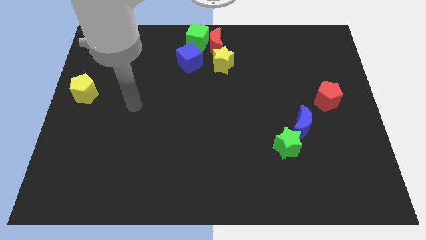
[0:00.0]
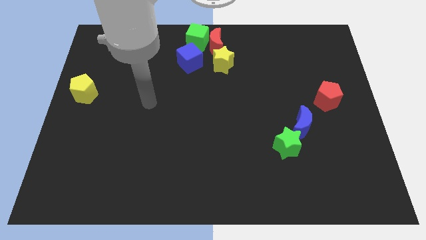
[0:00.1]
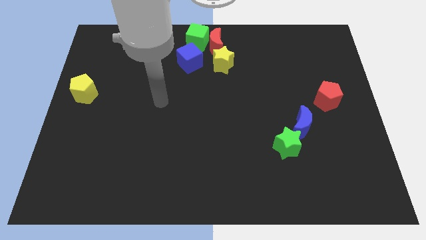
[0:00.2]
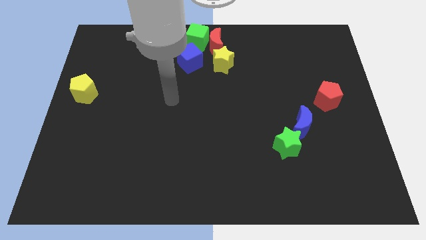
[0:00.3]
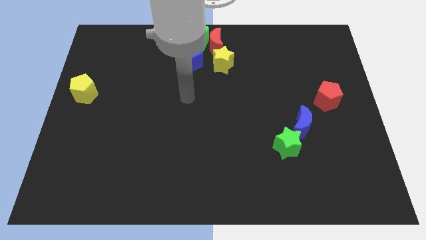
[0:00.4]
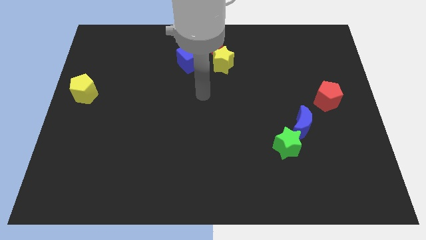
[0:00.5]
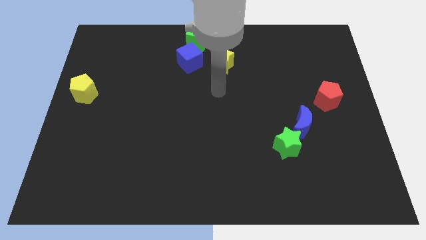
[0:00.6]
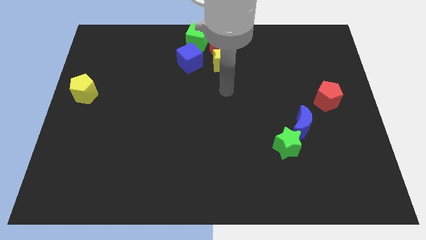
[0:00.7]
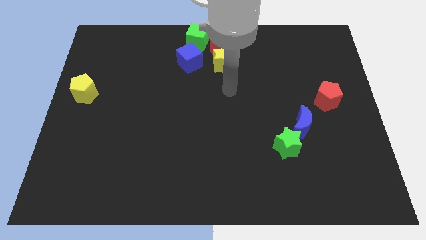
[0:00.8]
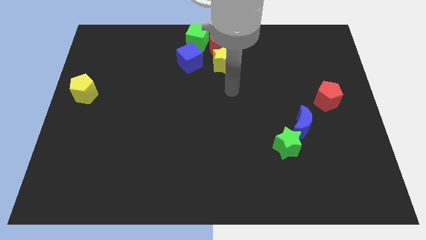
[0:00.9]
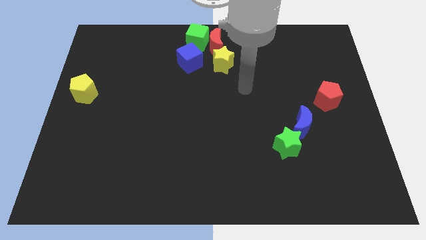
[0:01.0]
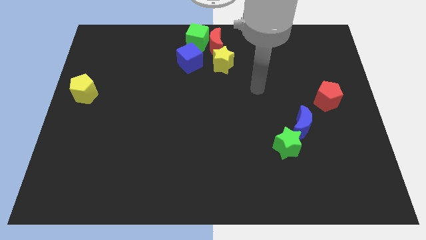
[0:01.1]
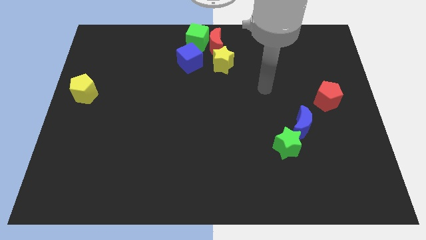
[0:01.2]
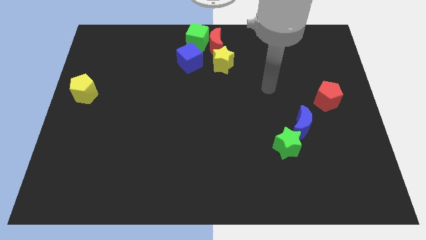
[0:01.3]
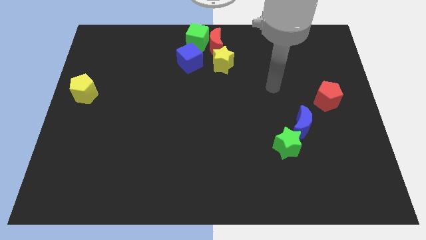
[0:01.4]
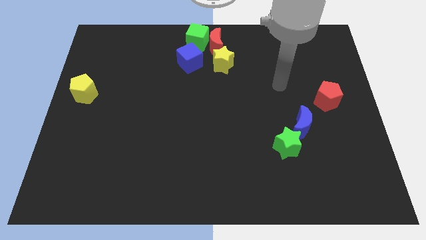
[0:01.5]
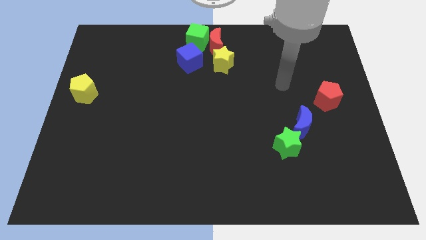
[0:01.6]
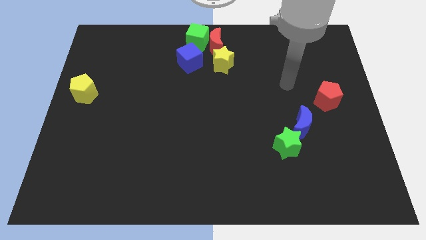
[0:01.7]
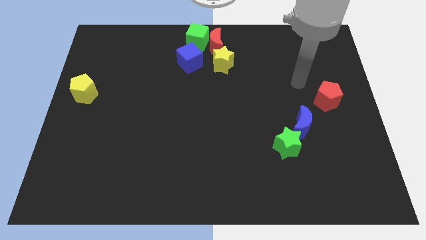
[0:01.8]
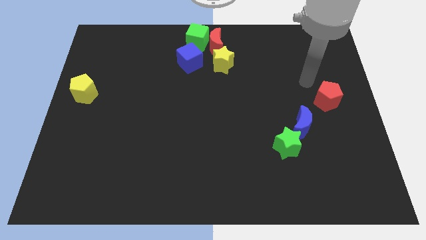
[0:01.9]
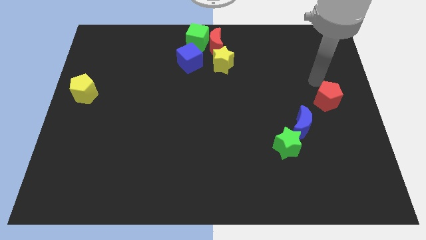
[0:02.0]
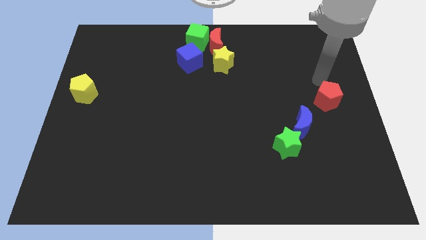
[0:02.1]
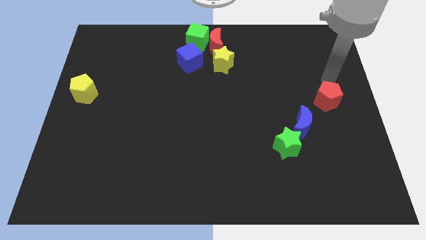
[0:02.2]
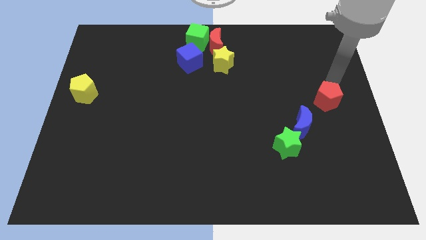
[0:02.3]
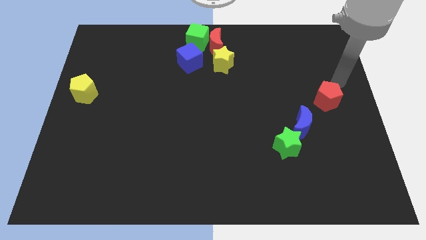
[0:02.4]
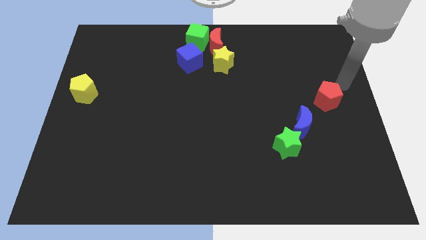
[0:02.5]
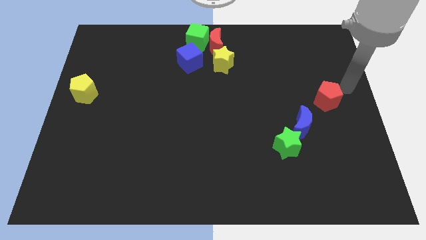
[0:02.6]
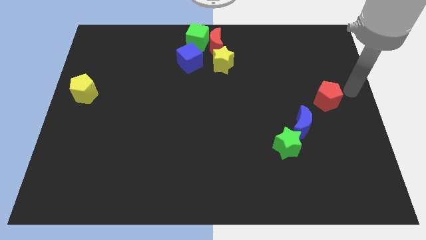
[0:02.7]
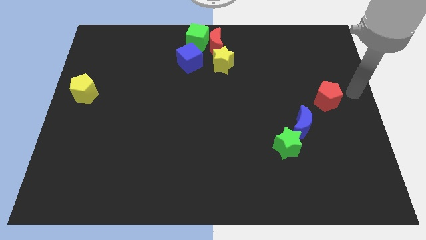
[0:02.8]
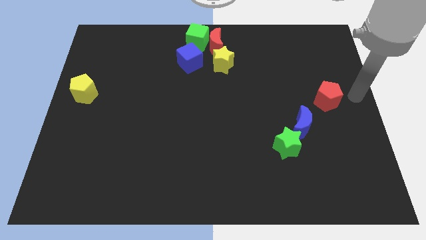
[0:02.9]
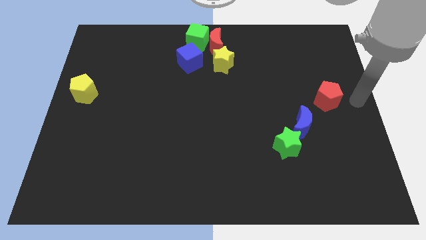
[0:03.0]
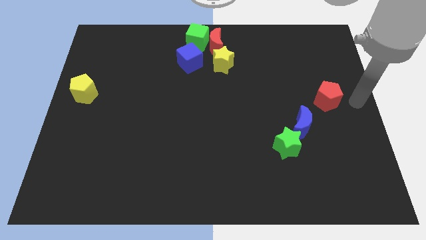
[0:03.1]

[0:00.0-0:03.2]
point your arm to the center right side of the board

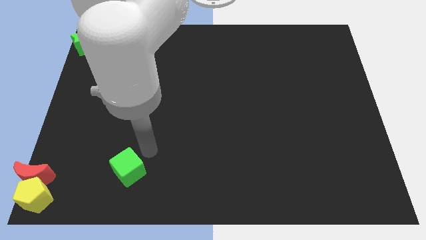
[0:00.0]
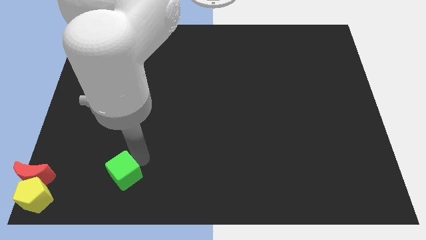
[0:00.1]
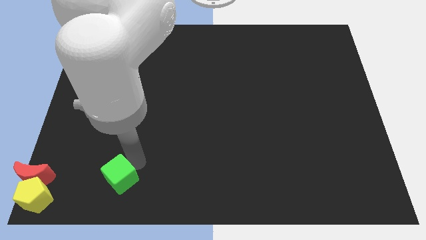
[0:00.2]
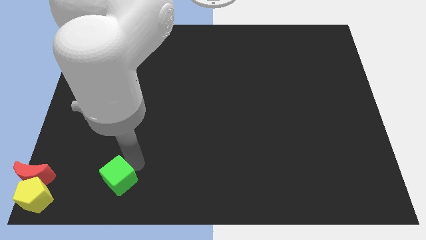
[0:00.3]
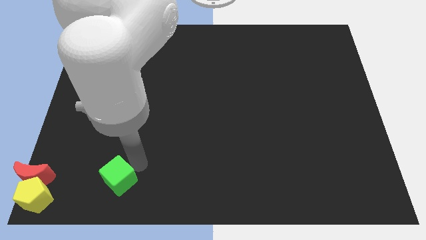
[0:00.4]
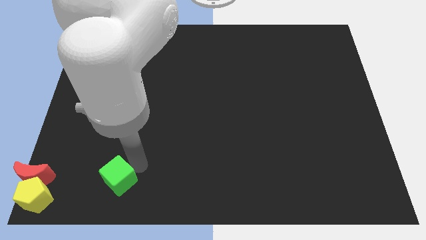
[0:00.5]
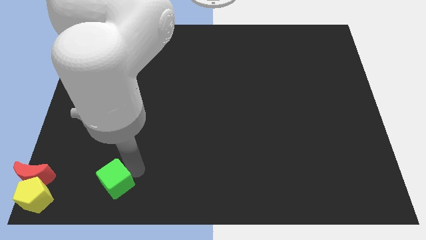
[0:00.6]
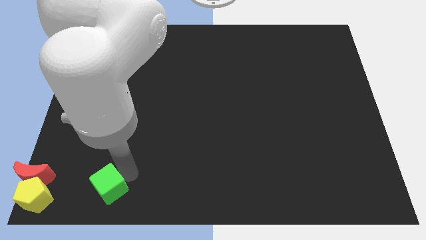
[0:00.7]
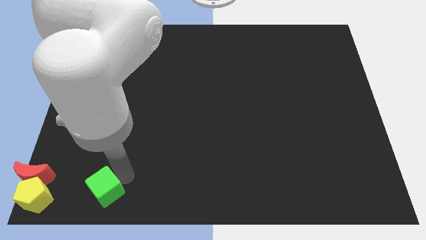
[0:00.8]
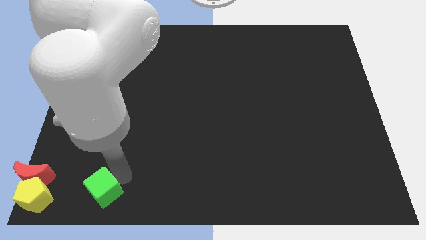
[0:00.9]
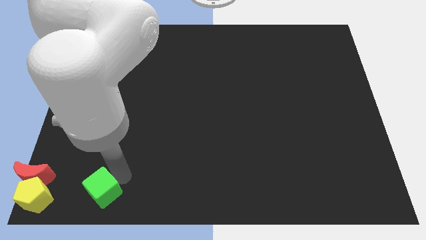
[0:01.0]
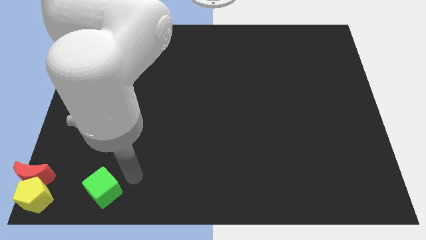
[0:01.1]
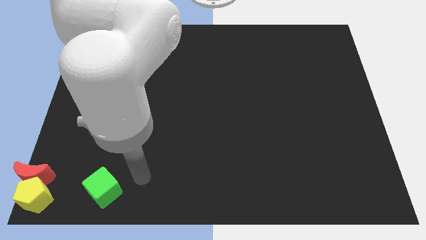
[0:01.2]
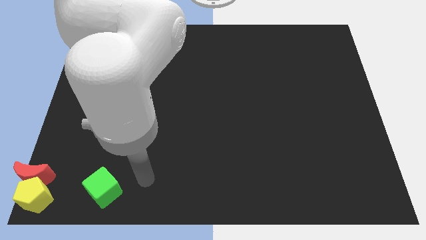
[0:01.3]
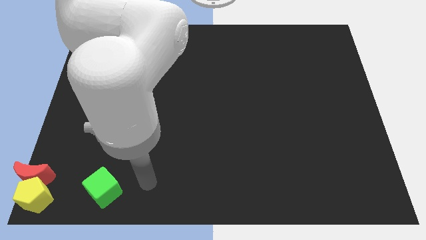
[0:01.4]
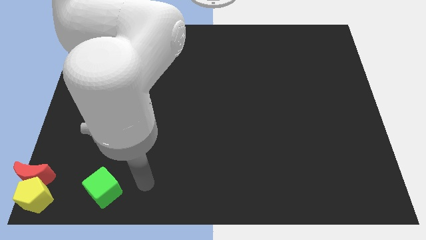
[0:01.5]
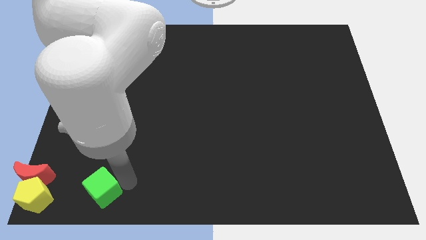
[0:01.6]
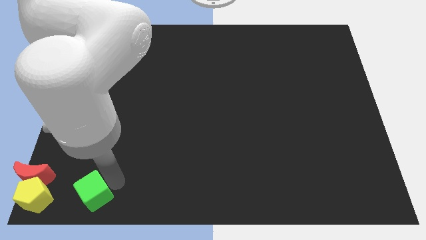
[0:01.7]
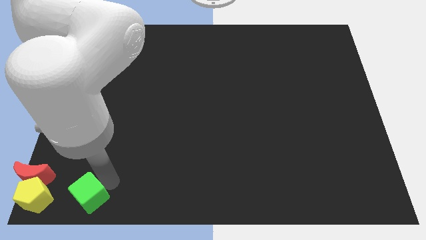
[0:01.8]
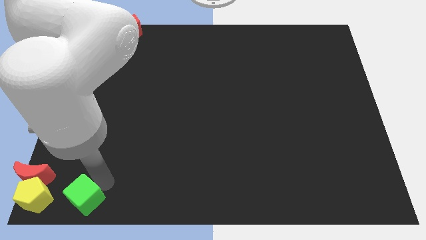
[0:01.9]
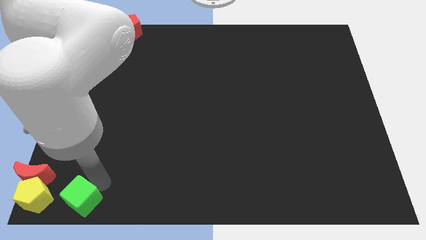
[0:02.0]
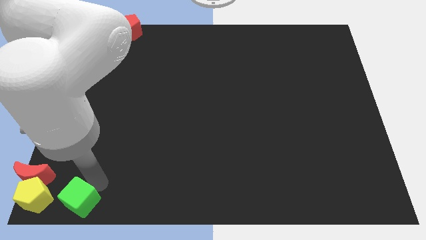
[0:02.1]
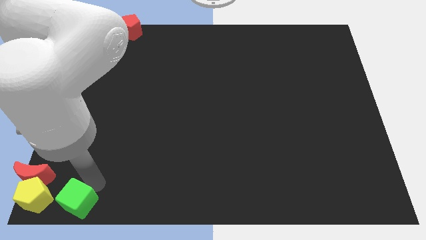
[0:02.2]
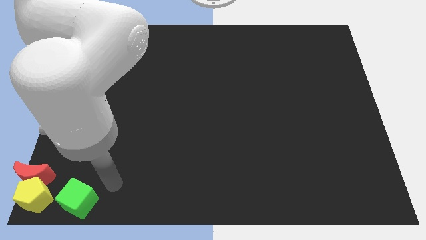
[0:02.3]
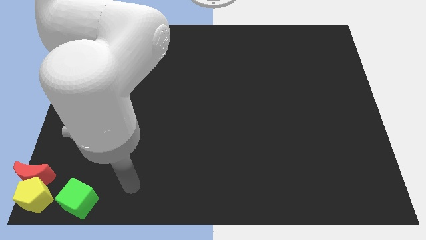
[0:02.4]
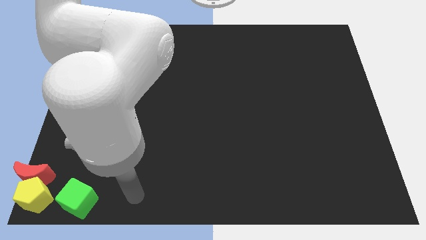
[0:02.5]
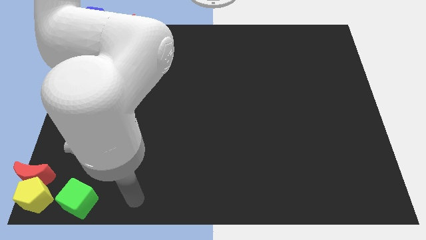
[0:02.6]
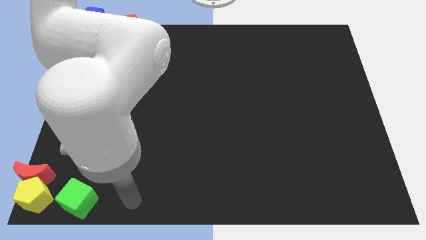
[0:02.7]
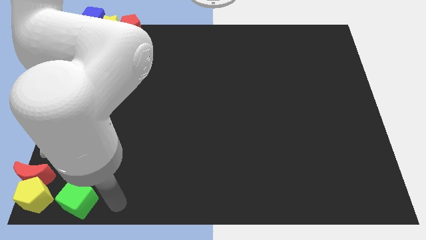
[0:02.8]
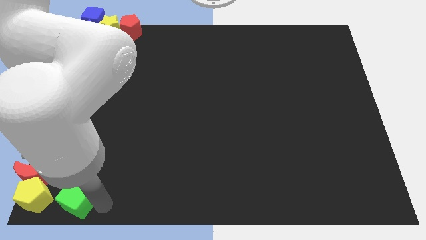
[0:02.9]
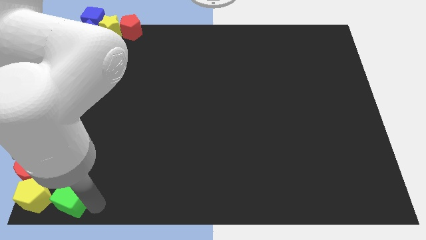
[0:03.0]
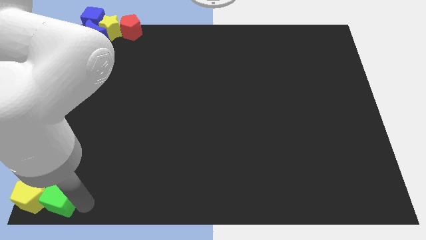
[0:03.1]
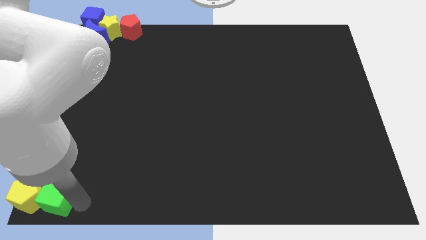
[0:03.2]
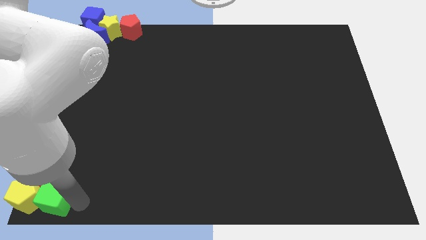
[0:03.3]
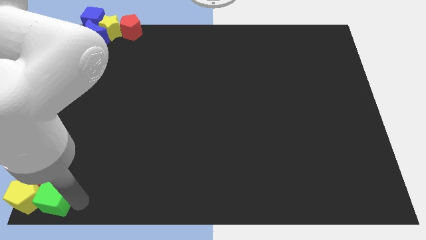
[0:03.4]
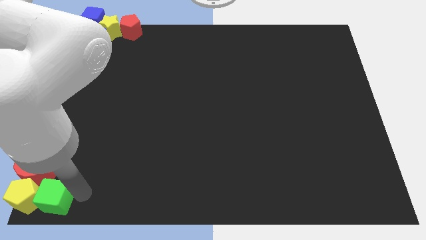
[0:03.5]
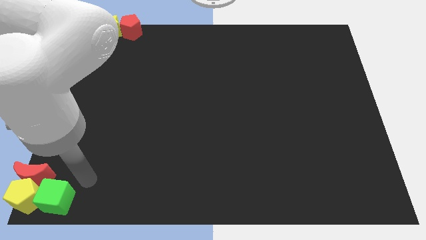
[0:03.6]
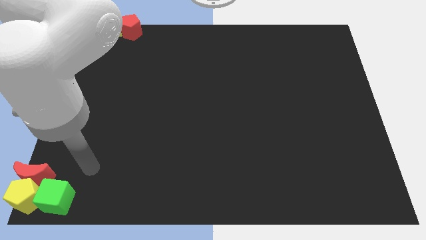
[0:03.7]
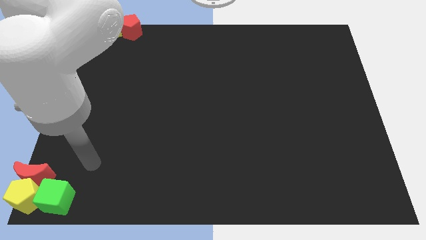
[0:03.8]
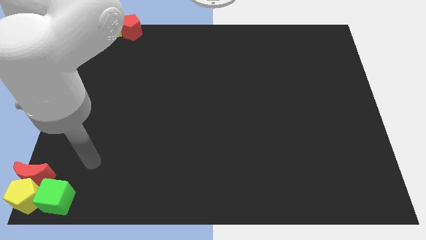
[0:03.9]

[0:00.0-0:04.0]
move the green cube into the yellow pentagon

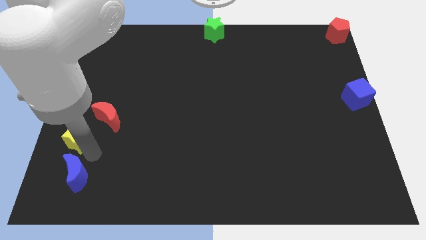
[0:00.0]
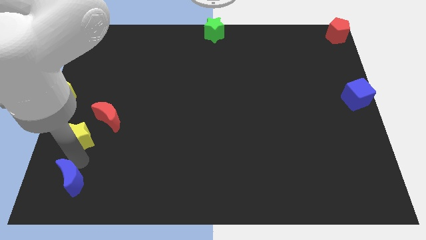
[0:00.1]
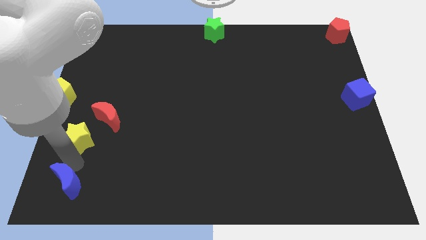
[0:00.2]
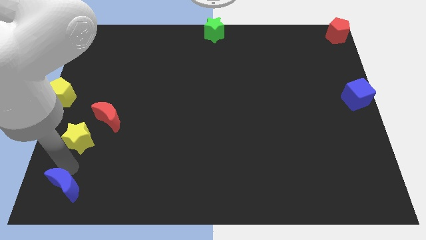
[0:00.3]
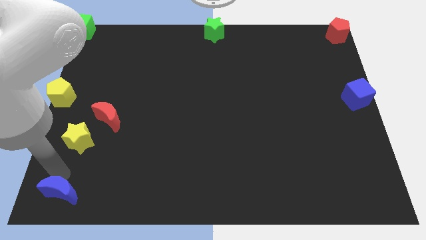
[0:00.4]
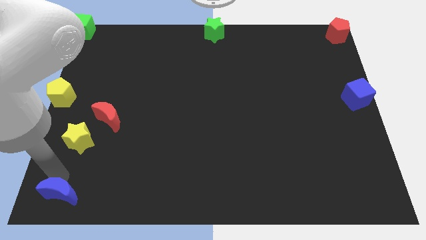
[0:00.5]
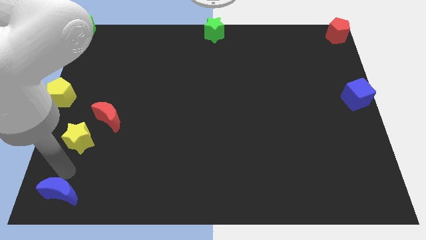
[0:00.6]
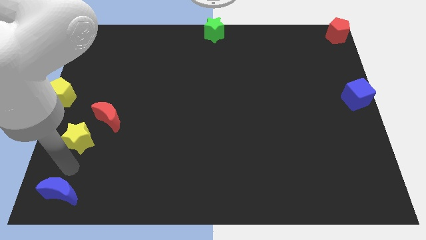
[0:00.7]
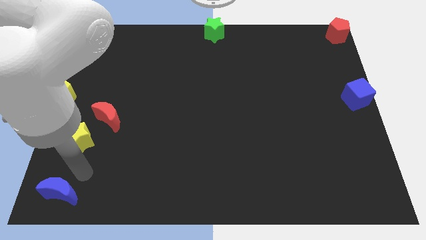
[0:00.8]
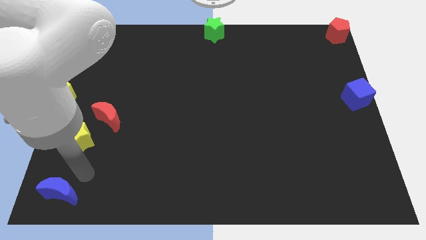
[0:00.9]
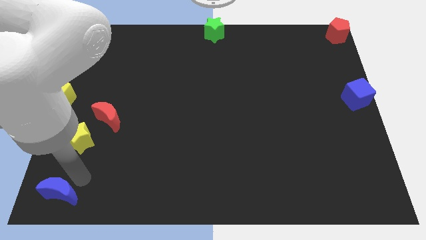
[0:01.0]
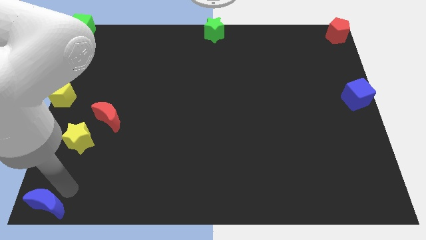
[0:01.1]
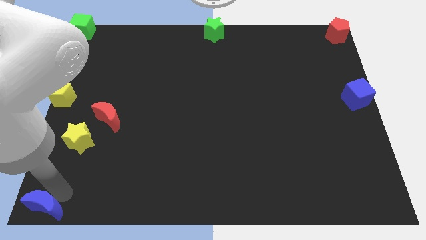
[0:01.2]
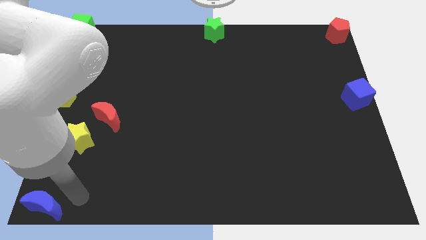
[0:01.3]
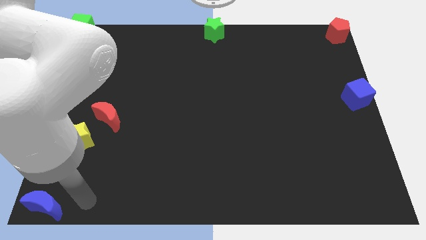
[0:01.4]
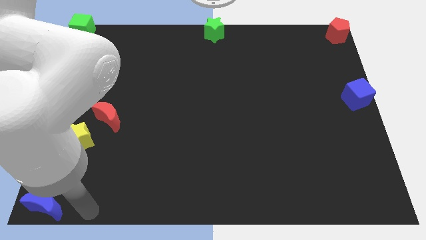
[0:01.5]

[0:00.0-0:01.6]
push the blue crescent to the bottom left corner of the board
